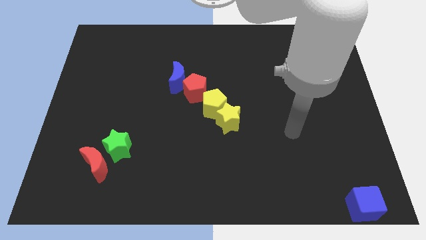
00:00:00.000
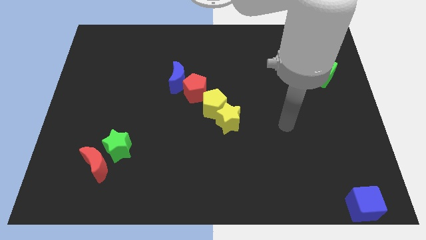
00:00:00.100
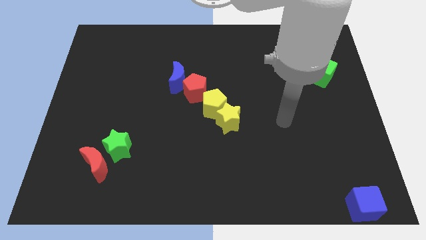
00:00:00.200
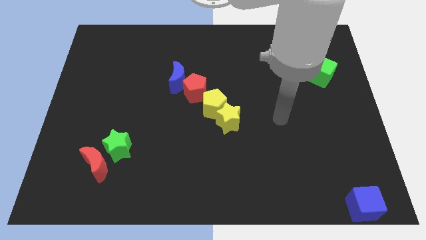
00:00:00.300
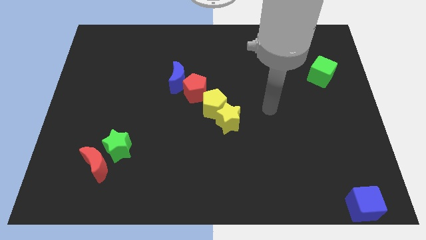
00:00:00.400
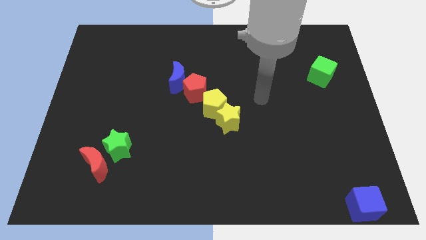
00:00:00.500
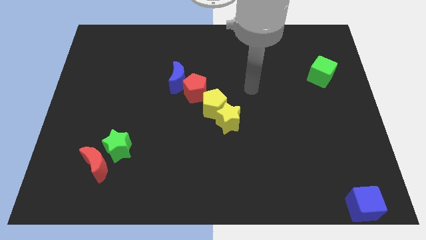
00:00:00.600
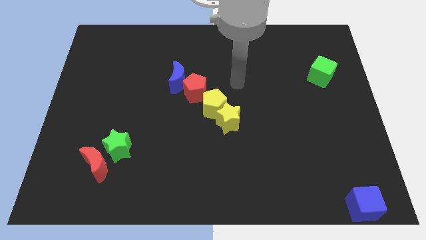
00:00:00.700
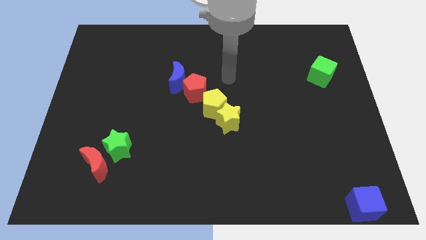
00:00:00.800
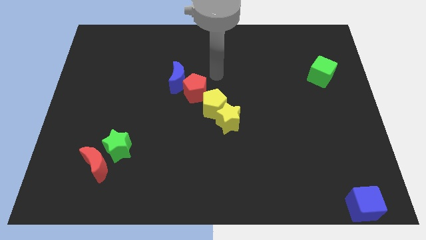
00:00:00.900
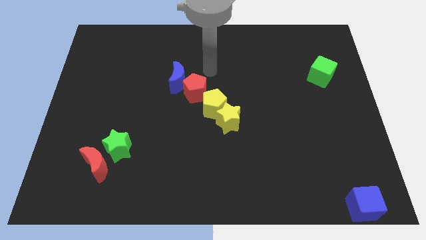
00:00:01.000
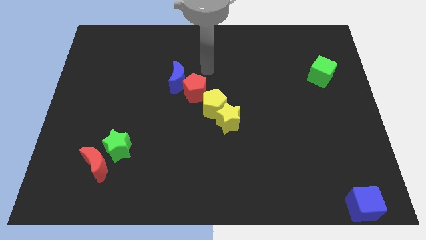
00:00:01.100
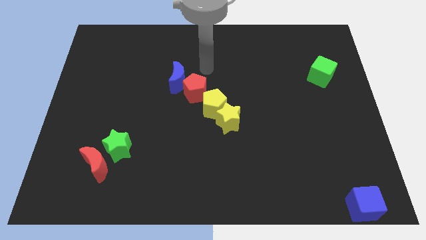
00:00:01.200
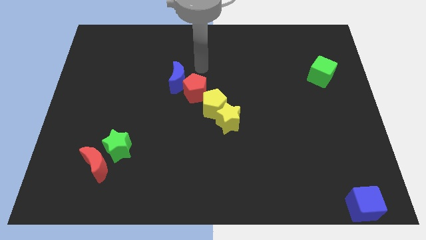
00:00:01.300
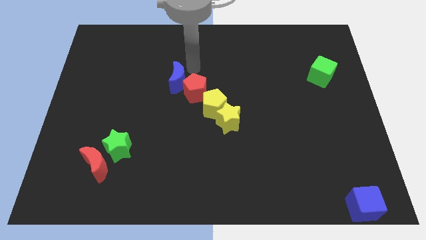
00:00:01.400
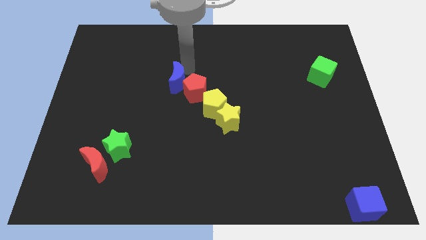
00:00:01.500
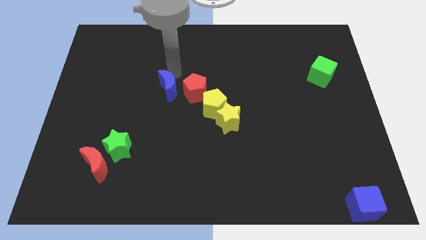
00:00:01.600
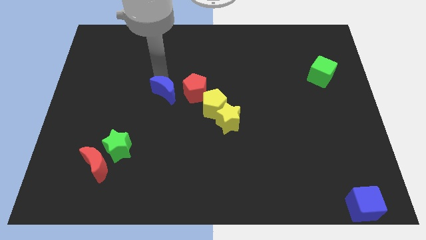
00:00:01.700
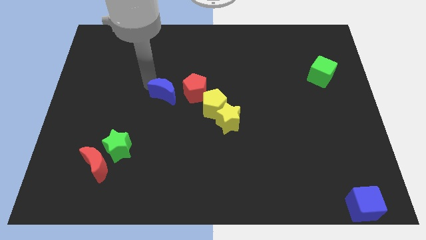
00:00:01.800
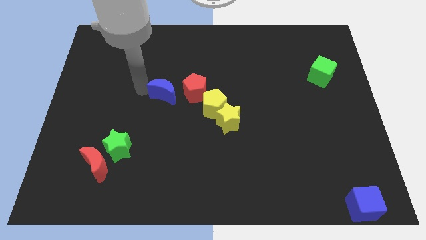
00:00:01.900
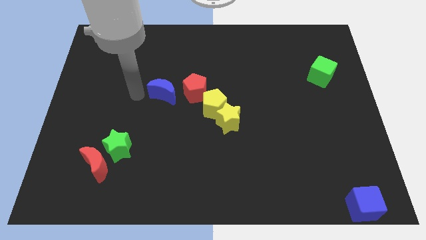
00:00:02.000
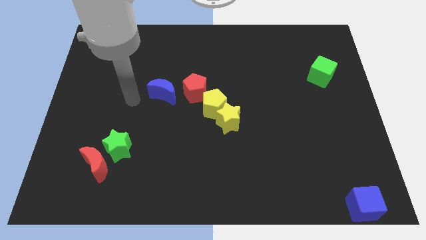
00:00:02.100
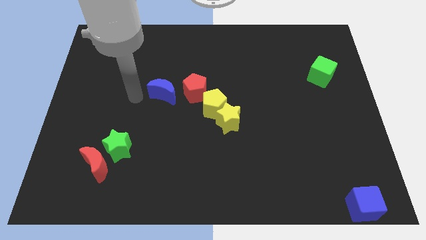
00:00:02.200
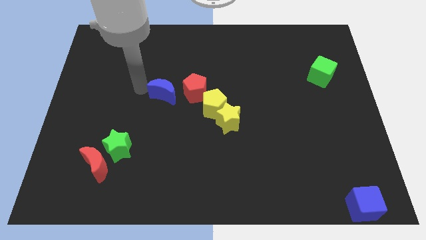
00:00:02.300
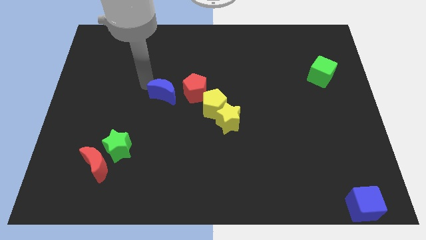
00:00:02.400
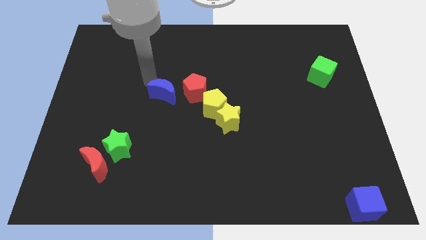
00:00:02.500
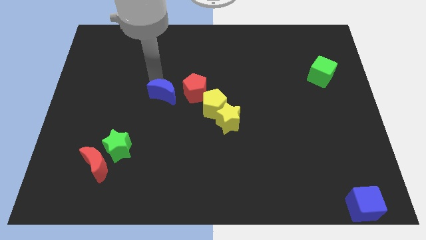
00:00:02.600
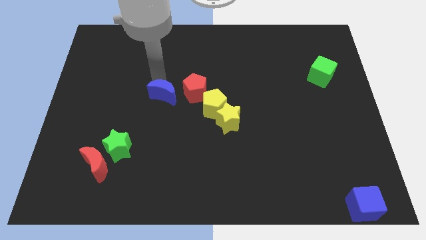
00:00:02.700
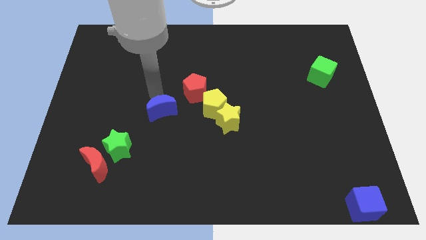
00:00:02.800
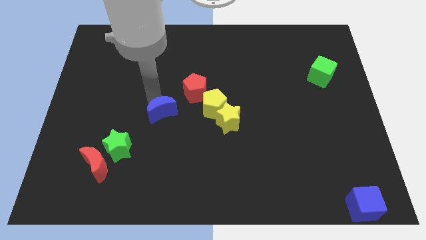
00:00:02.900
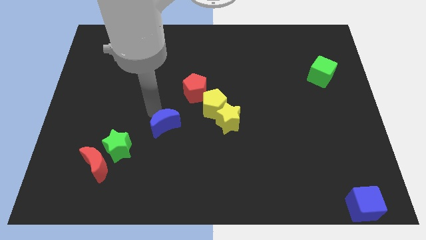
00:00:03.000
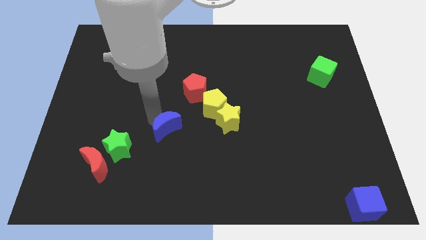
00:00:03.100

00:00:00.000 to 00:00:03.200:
move the blue crescent in between the green star and yellow pentagon

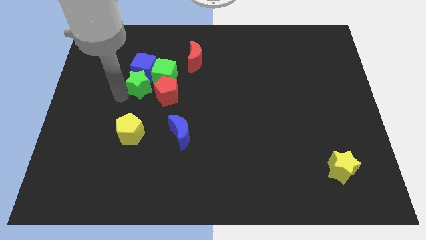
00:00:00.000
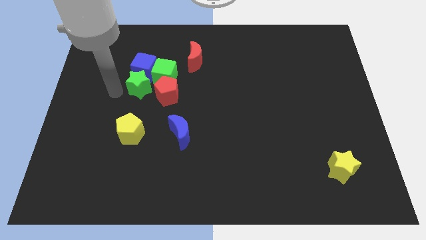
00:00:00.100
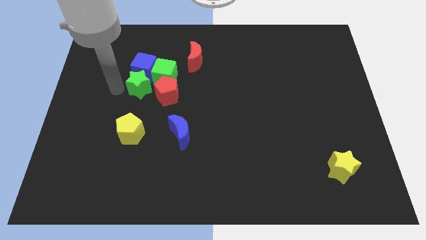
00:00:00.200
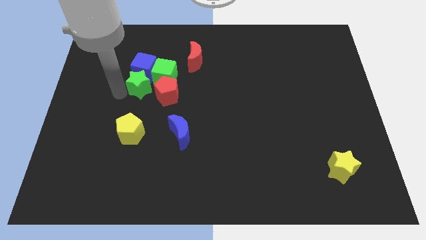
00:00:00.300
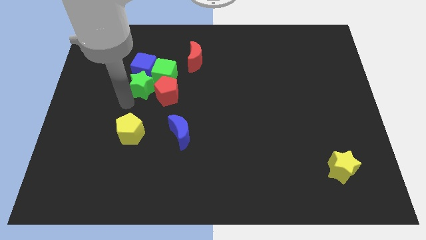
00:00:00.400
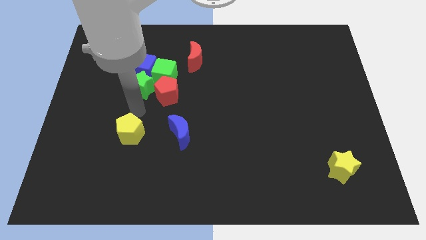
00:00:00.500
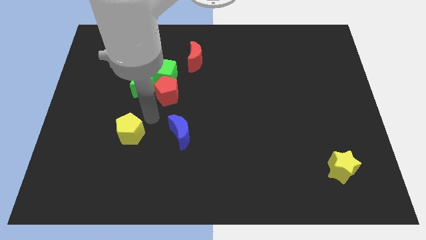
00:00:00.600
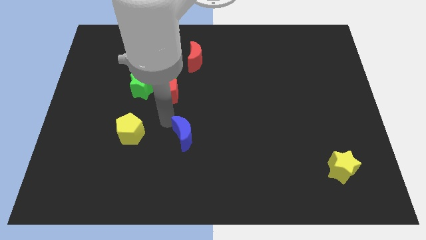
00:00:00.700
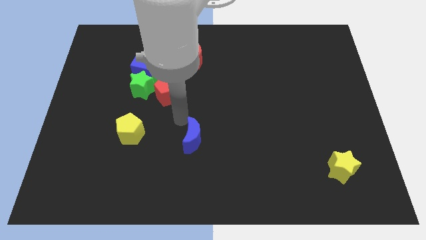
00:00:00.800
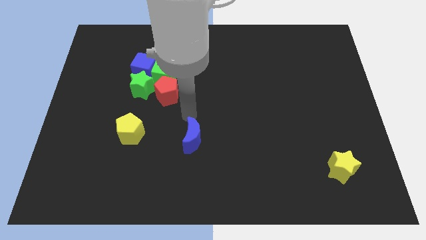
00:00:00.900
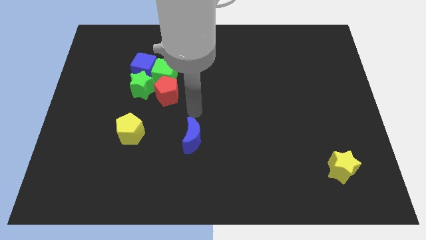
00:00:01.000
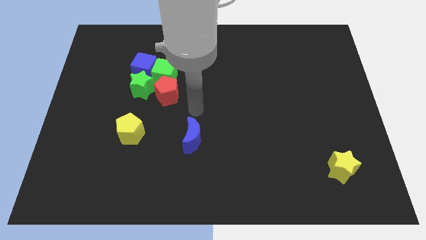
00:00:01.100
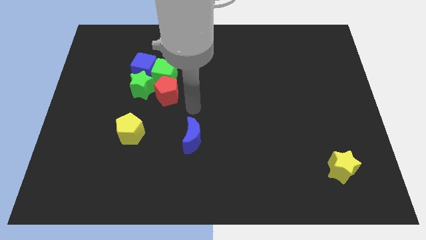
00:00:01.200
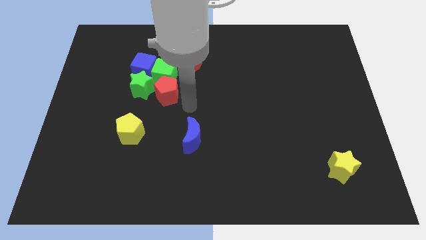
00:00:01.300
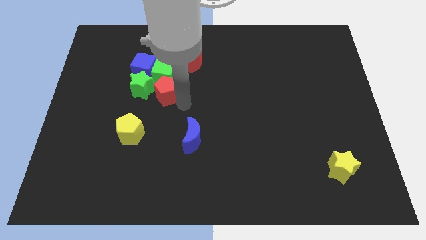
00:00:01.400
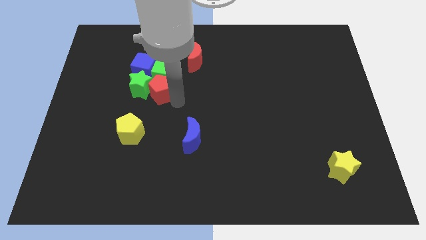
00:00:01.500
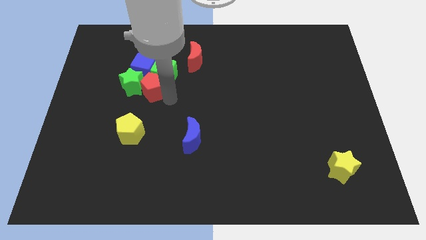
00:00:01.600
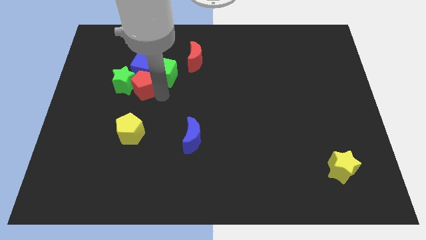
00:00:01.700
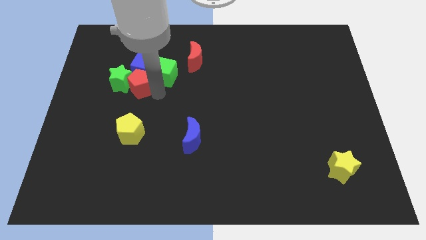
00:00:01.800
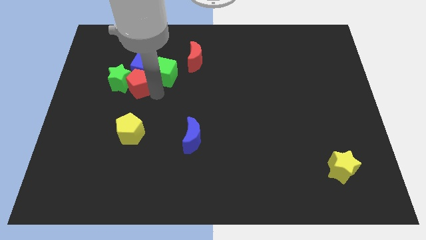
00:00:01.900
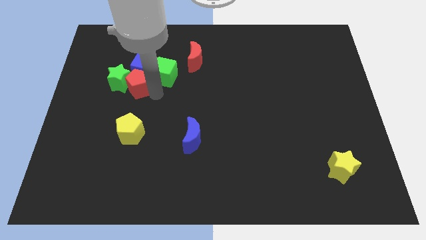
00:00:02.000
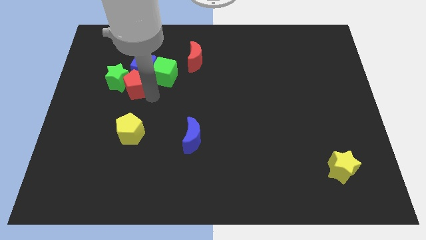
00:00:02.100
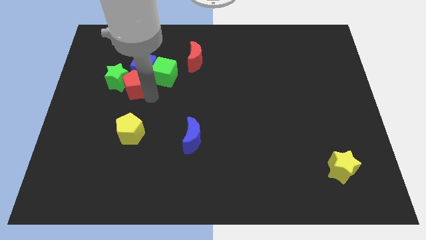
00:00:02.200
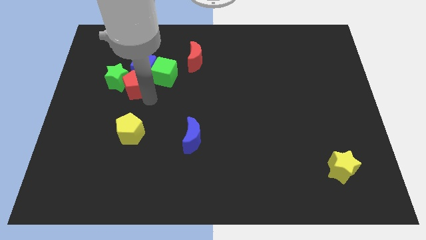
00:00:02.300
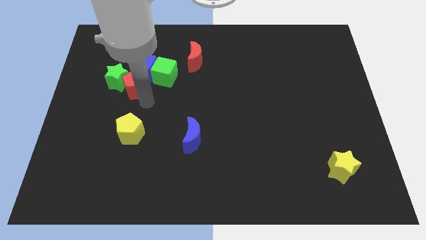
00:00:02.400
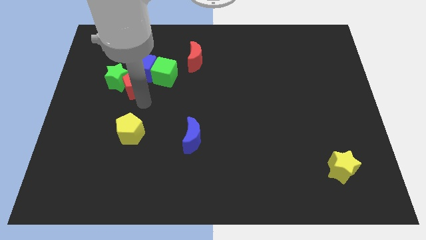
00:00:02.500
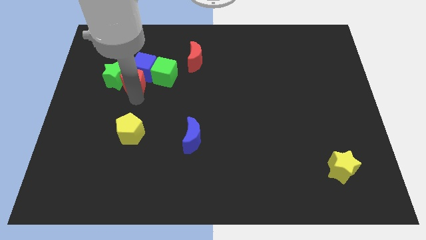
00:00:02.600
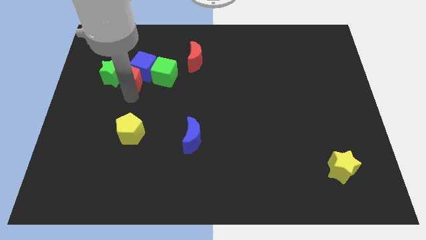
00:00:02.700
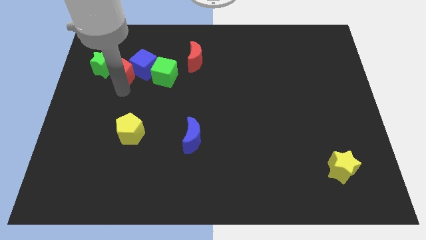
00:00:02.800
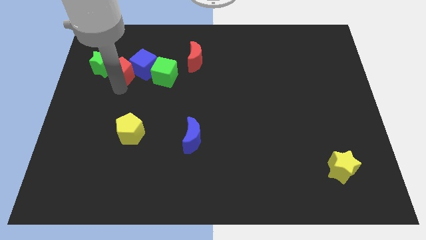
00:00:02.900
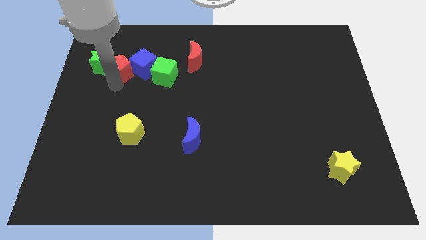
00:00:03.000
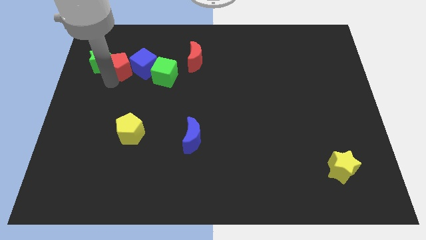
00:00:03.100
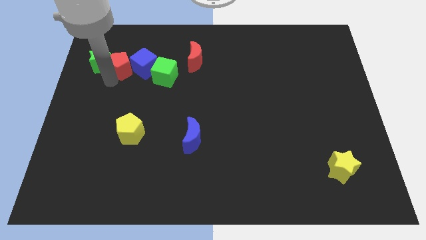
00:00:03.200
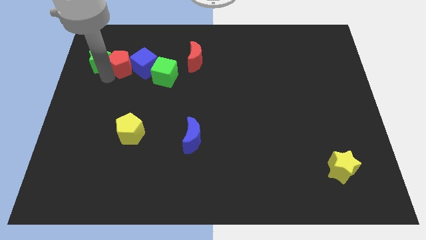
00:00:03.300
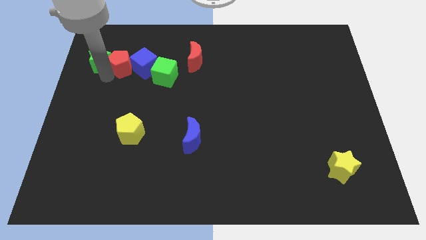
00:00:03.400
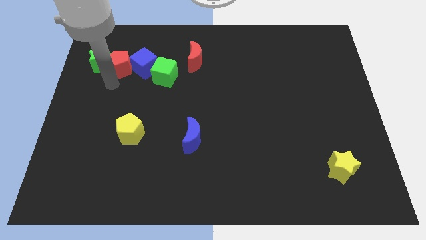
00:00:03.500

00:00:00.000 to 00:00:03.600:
push red pentagon along with green star towards left top

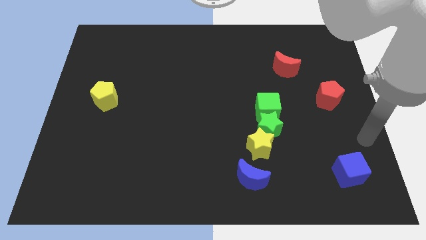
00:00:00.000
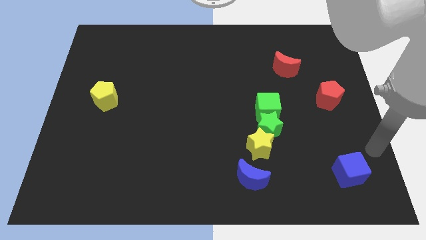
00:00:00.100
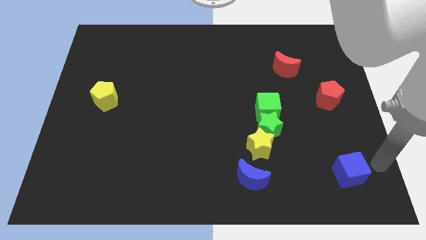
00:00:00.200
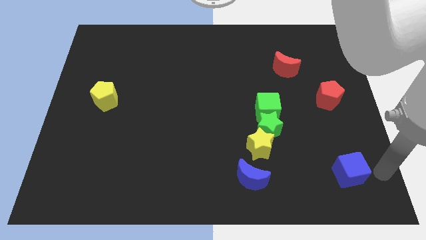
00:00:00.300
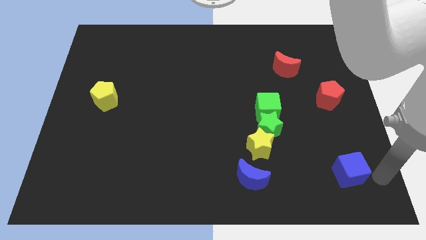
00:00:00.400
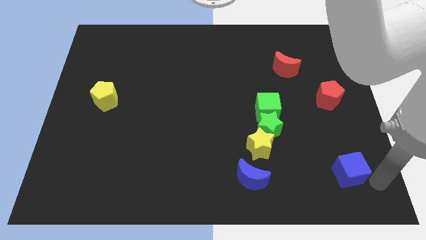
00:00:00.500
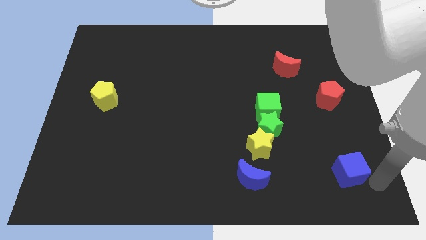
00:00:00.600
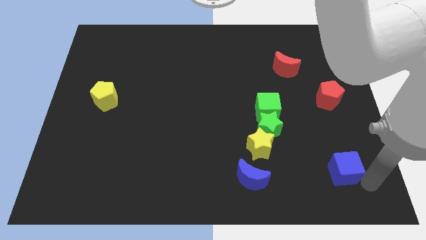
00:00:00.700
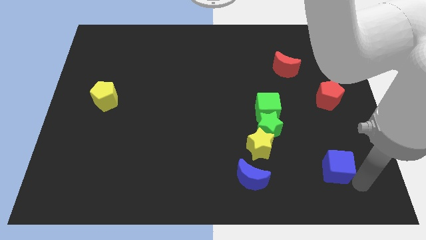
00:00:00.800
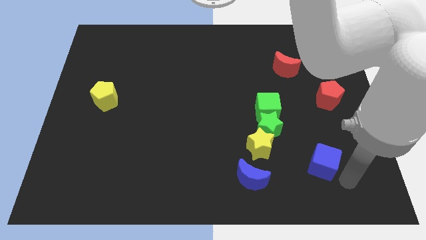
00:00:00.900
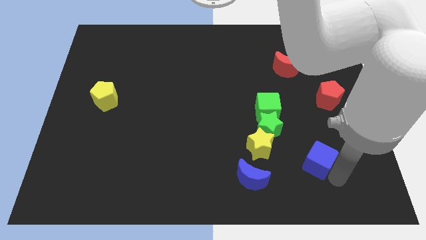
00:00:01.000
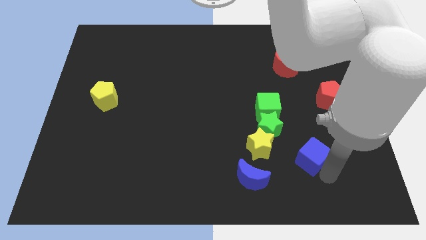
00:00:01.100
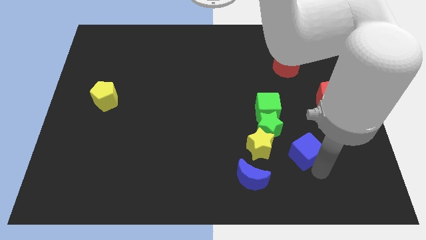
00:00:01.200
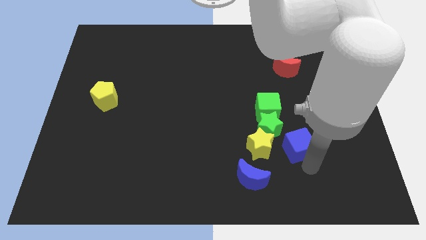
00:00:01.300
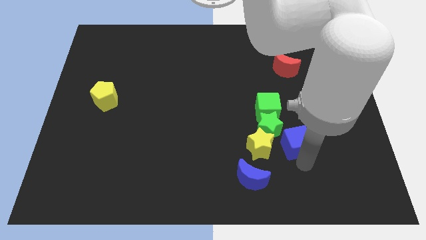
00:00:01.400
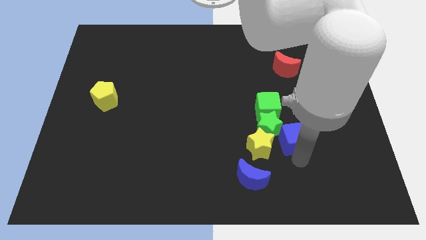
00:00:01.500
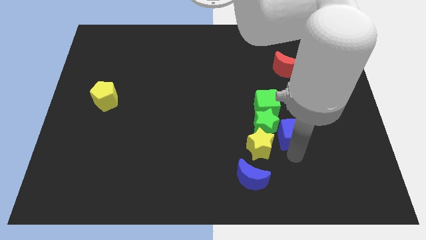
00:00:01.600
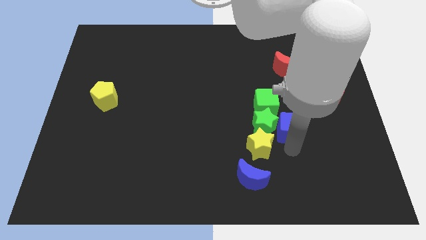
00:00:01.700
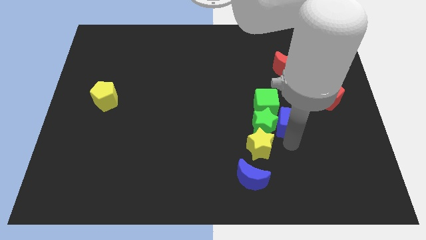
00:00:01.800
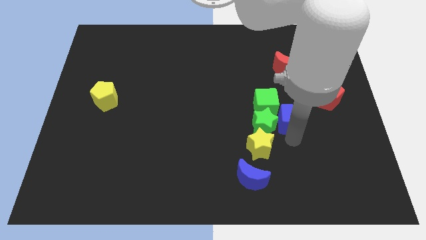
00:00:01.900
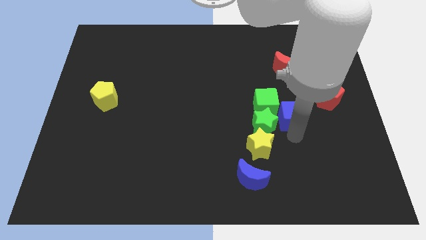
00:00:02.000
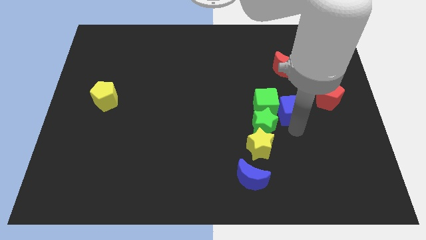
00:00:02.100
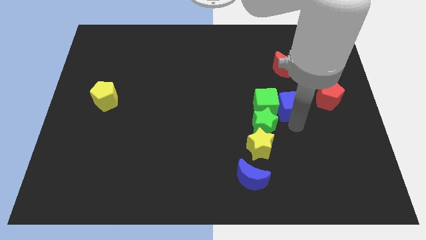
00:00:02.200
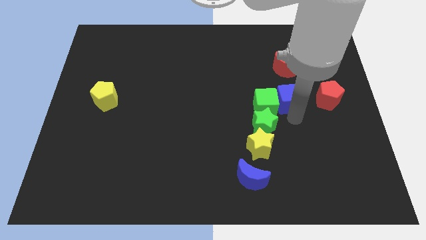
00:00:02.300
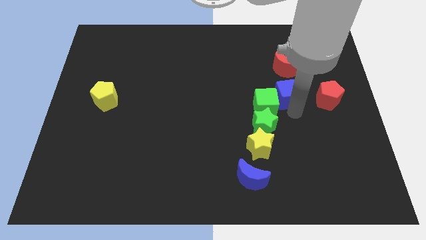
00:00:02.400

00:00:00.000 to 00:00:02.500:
move the blue cube to the right of green cube
